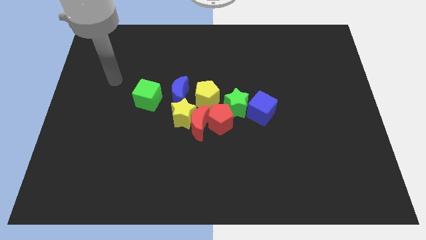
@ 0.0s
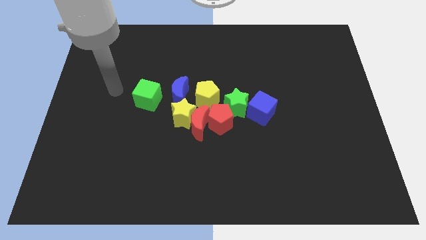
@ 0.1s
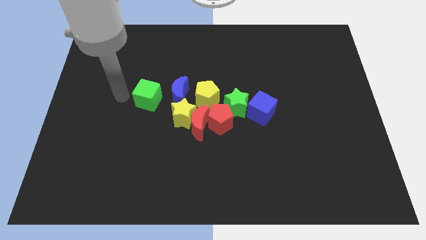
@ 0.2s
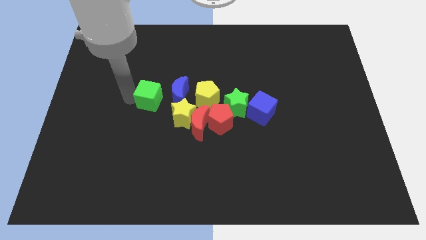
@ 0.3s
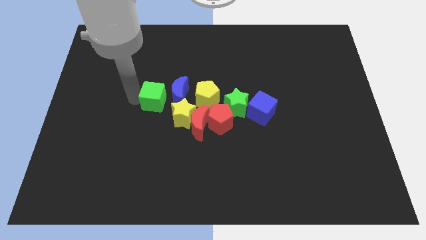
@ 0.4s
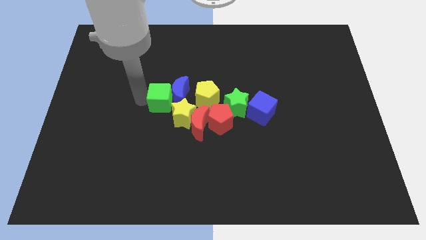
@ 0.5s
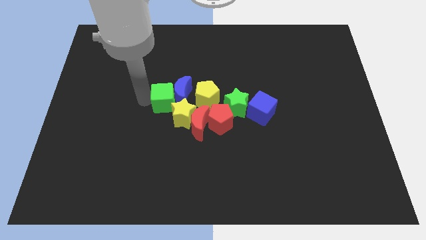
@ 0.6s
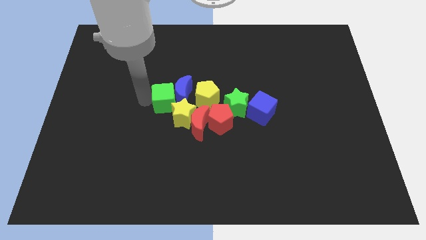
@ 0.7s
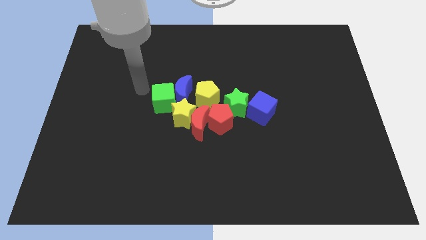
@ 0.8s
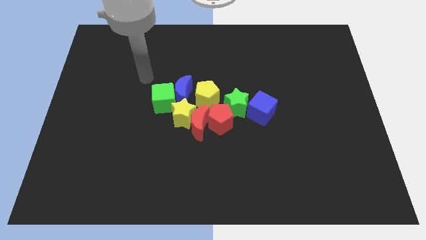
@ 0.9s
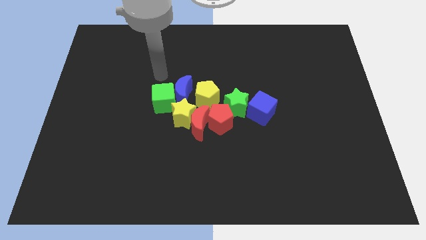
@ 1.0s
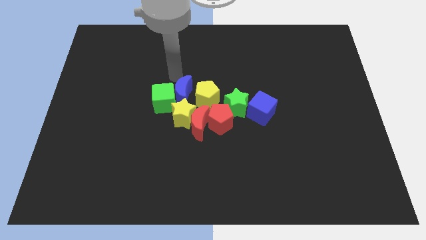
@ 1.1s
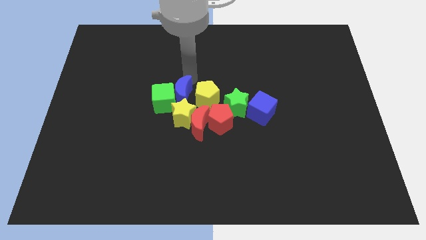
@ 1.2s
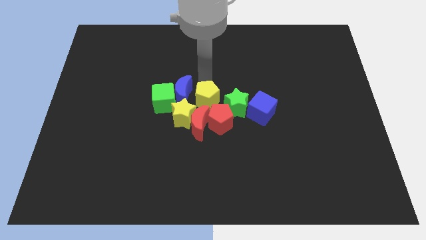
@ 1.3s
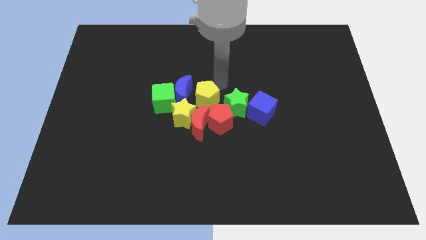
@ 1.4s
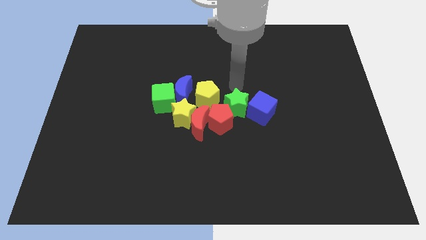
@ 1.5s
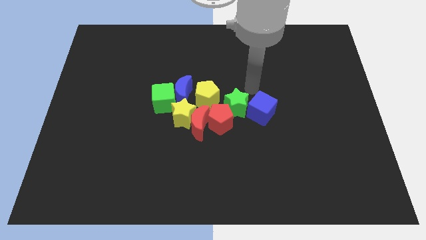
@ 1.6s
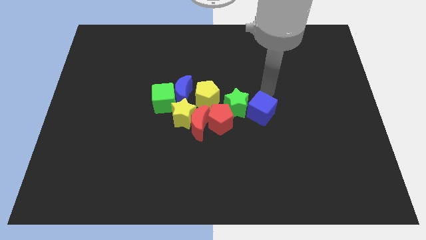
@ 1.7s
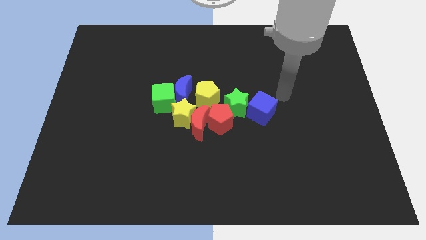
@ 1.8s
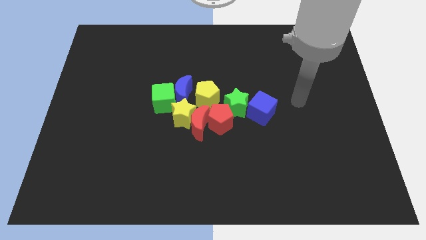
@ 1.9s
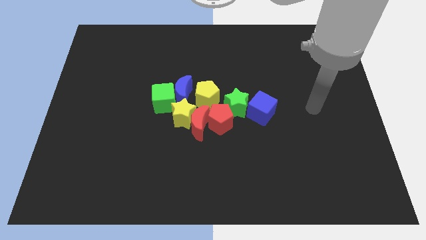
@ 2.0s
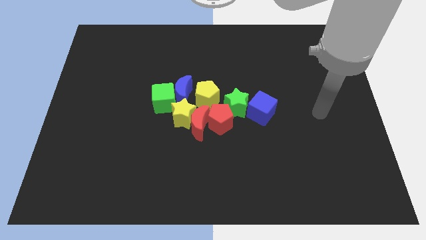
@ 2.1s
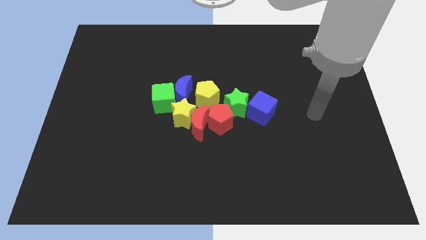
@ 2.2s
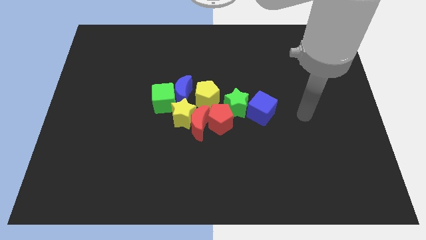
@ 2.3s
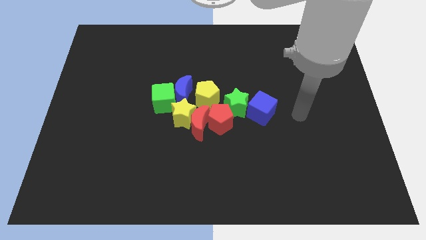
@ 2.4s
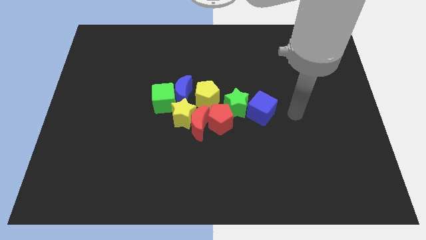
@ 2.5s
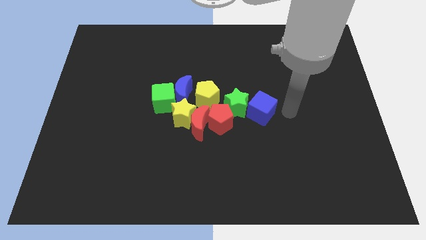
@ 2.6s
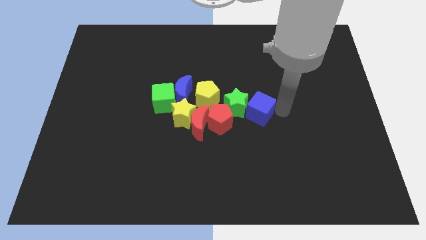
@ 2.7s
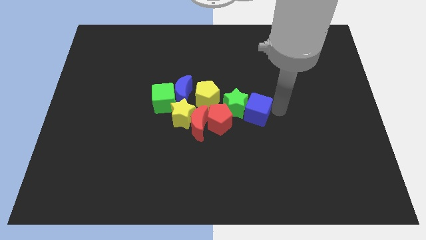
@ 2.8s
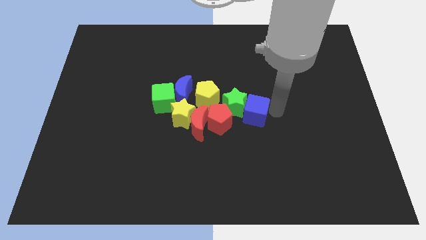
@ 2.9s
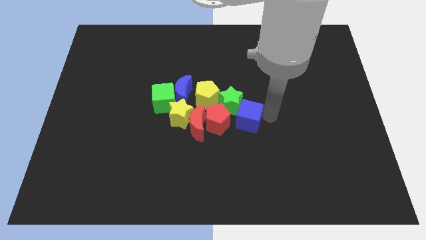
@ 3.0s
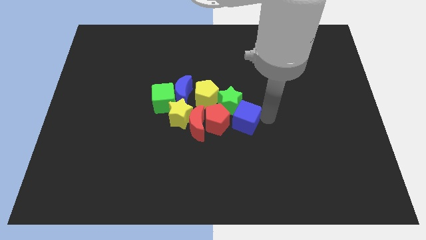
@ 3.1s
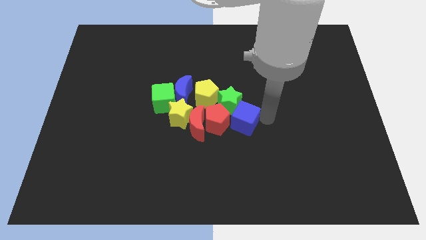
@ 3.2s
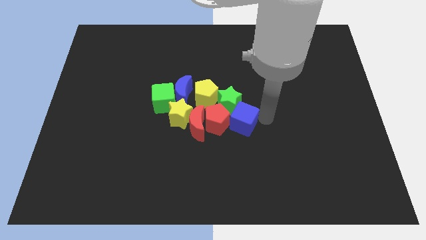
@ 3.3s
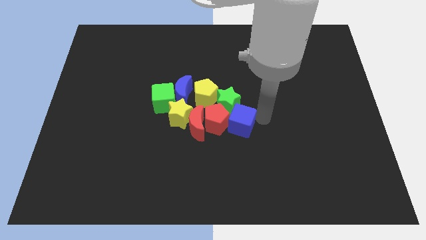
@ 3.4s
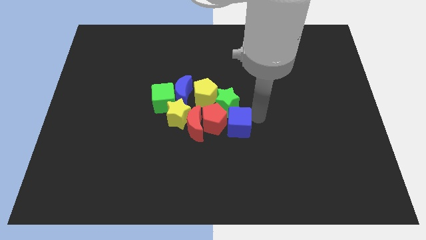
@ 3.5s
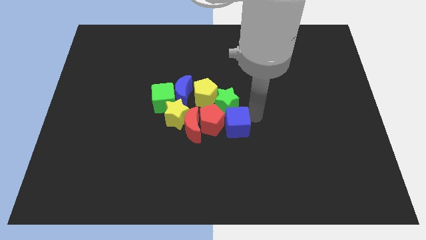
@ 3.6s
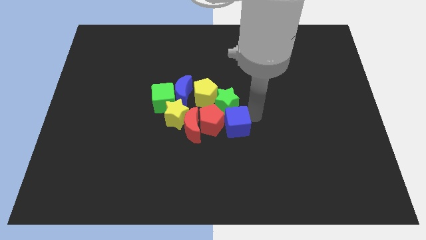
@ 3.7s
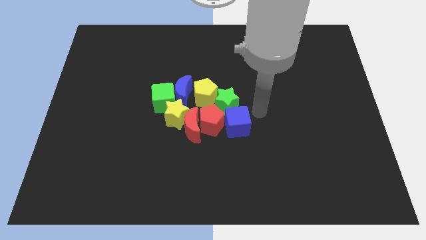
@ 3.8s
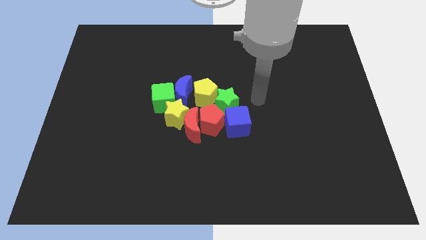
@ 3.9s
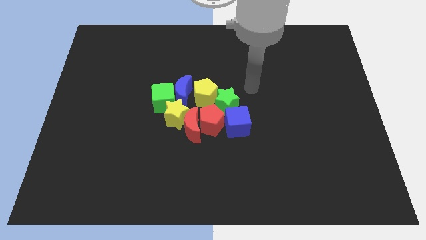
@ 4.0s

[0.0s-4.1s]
push the blue cube into the group of blocks

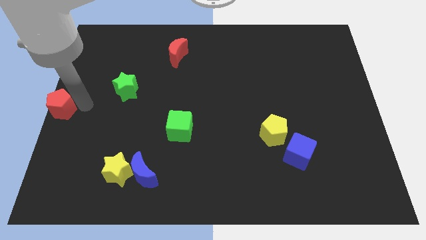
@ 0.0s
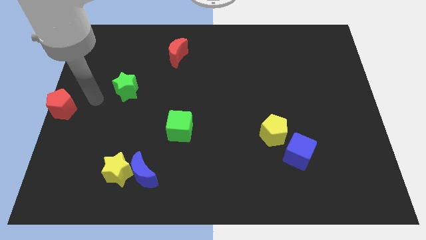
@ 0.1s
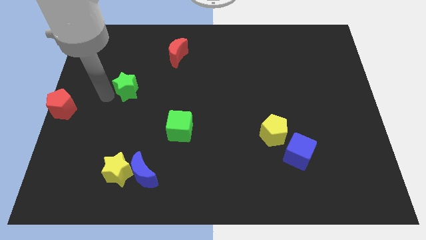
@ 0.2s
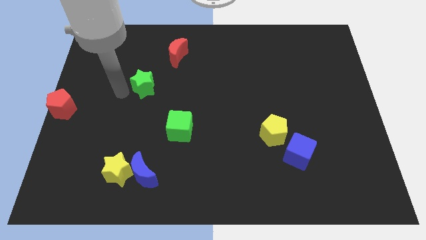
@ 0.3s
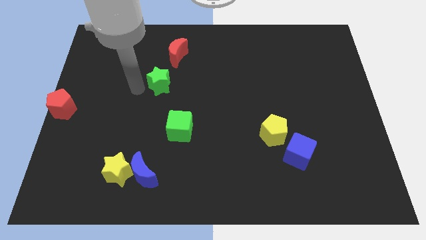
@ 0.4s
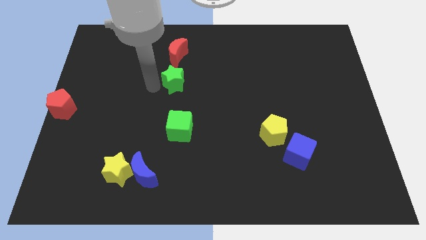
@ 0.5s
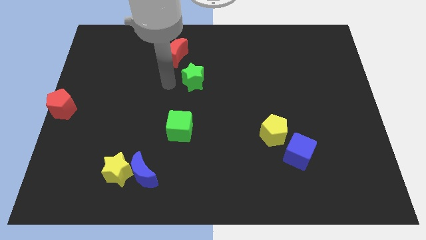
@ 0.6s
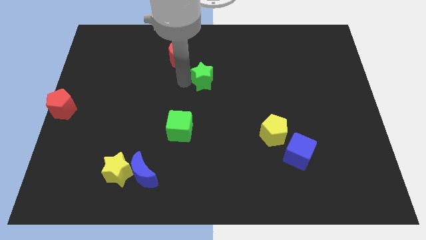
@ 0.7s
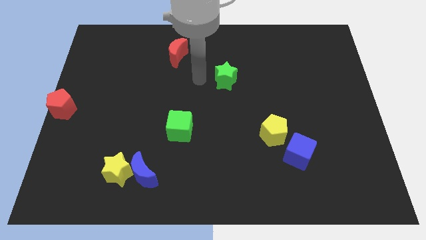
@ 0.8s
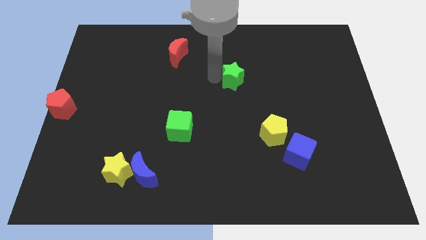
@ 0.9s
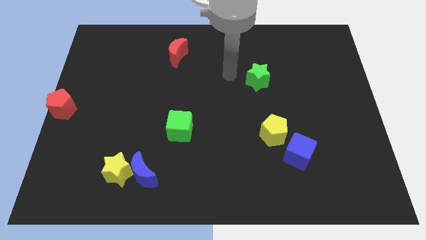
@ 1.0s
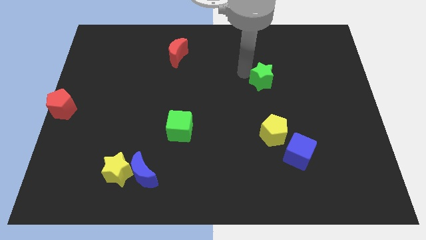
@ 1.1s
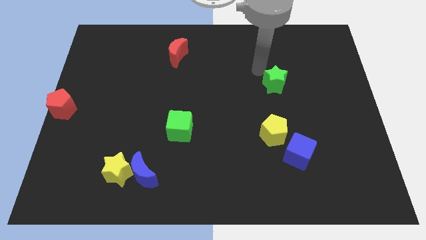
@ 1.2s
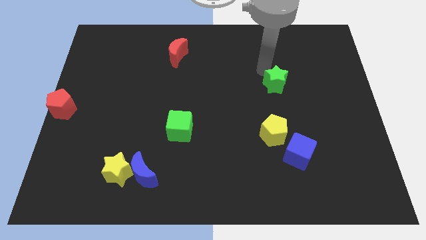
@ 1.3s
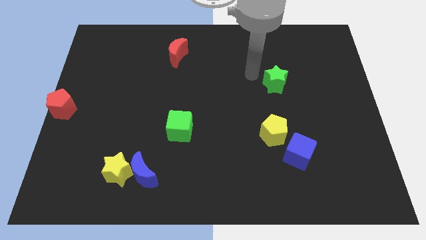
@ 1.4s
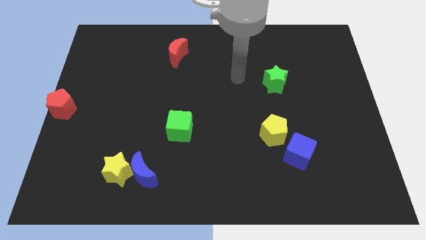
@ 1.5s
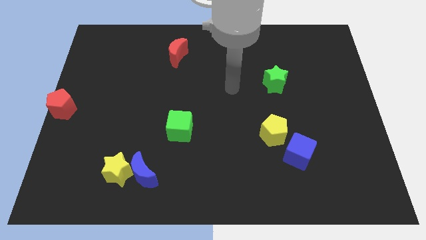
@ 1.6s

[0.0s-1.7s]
move the green star above the yellow pentagon

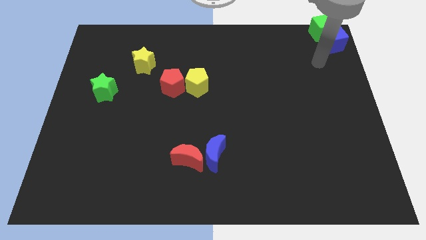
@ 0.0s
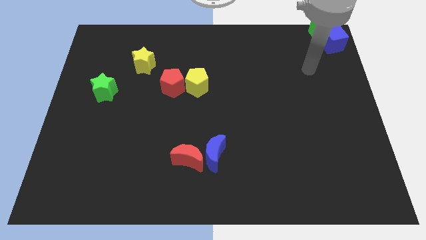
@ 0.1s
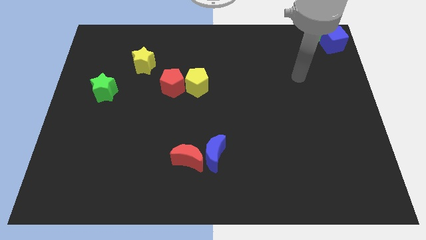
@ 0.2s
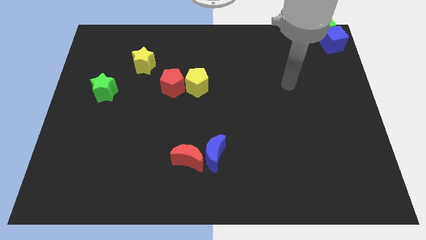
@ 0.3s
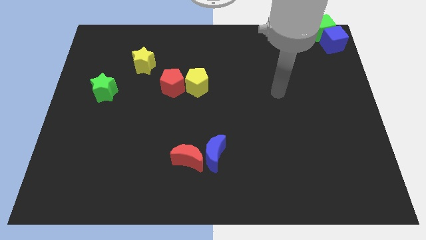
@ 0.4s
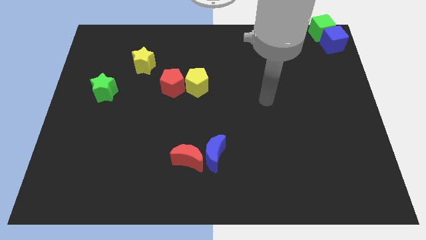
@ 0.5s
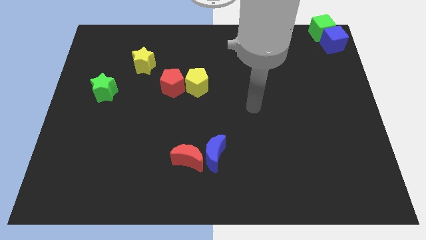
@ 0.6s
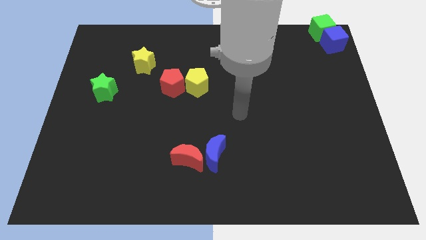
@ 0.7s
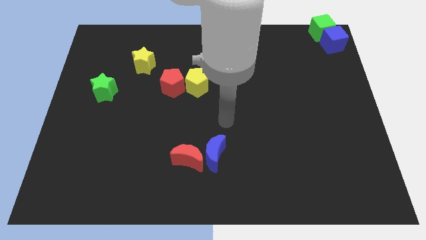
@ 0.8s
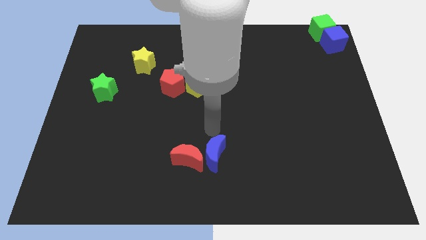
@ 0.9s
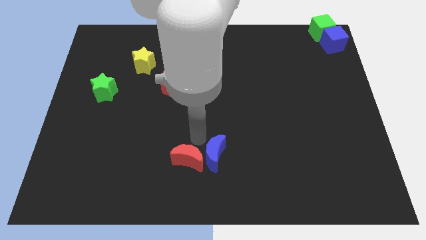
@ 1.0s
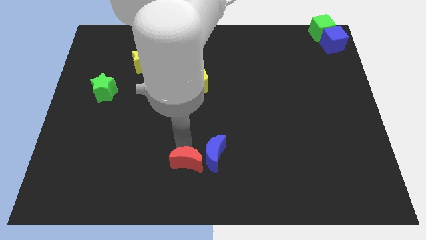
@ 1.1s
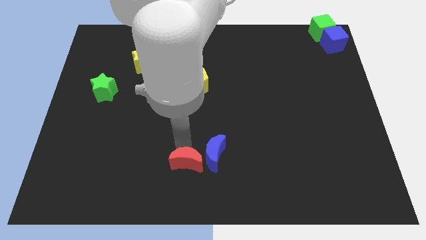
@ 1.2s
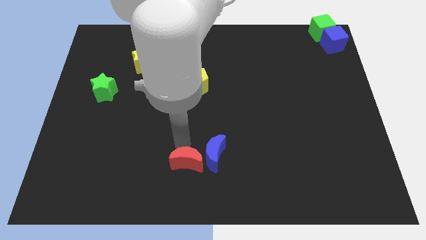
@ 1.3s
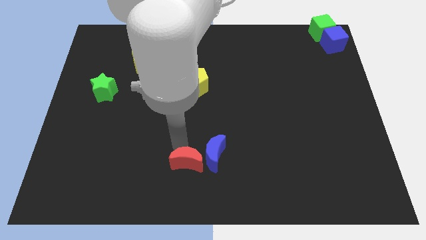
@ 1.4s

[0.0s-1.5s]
touch at the top side of the red crescent

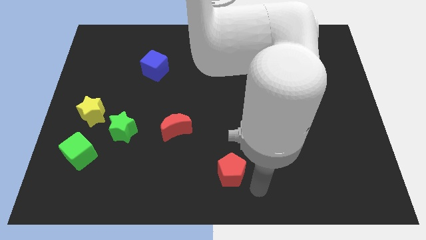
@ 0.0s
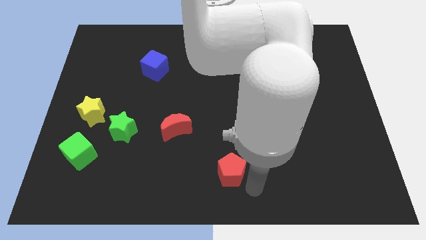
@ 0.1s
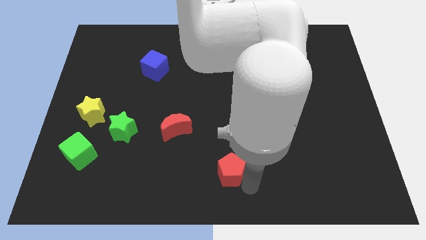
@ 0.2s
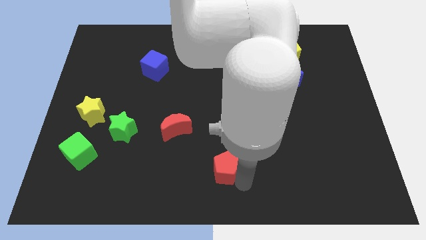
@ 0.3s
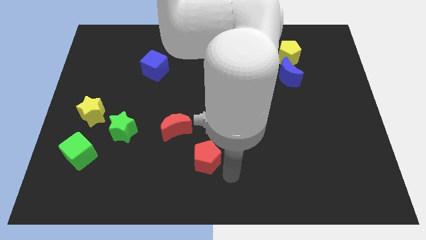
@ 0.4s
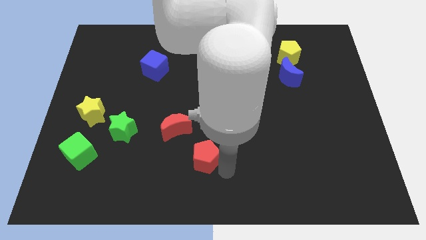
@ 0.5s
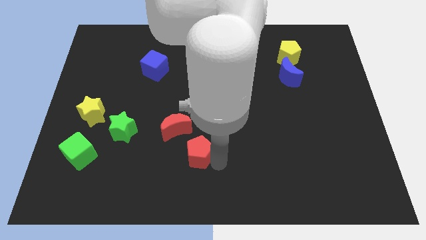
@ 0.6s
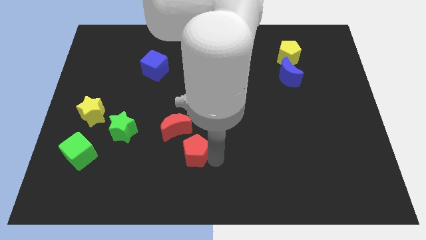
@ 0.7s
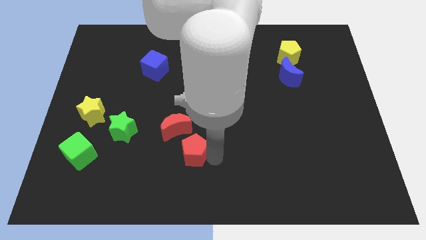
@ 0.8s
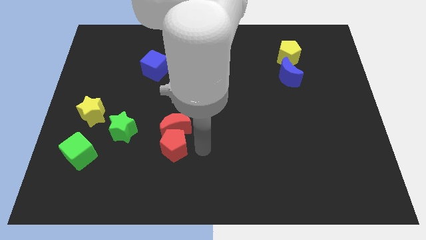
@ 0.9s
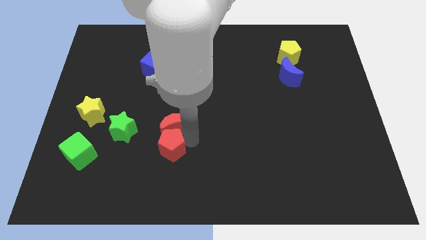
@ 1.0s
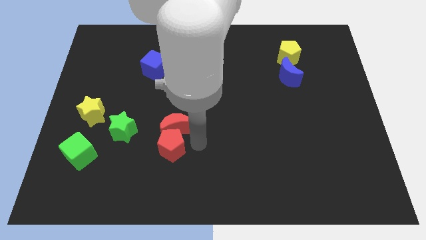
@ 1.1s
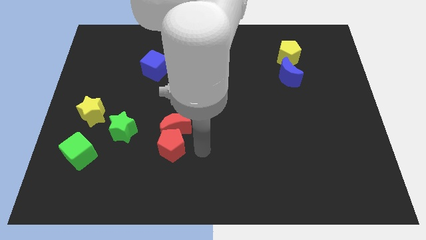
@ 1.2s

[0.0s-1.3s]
push the red pentagon into red moon

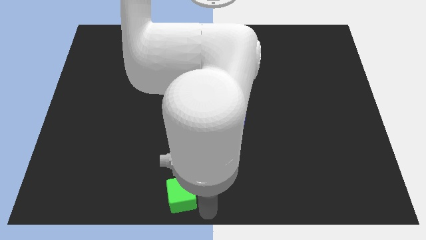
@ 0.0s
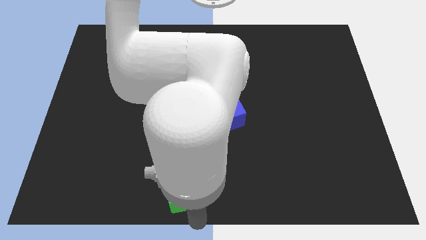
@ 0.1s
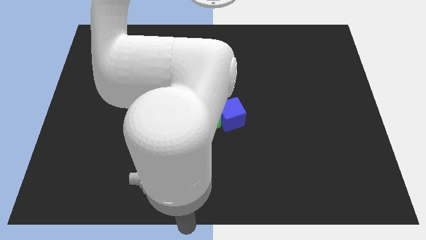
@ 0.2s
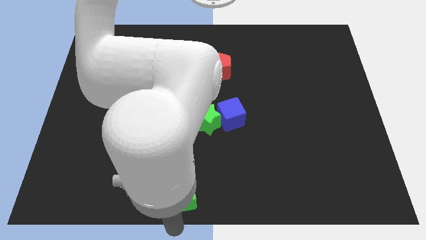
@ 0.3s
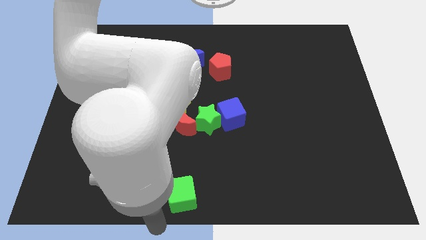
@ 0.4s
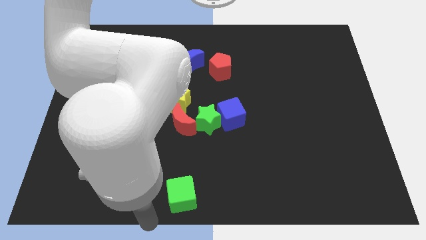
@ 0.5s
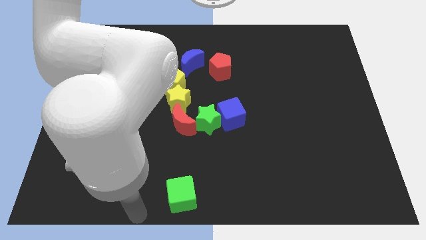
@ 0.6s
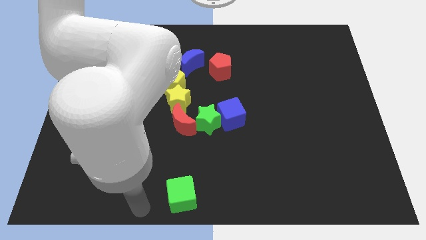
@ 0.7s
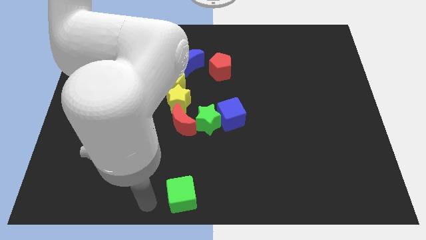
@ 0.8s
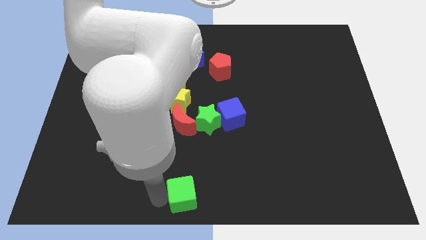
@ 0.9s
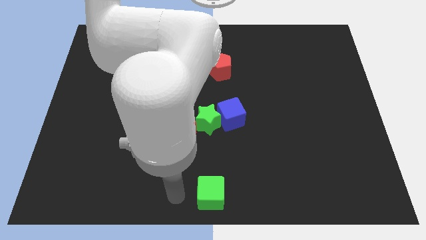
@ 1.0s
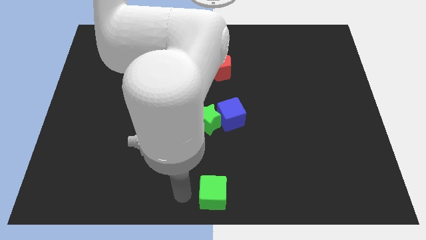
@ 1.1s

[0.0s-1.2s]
put the green cube vertically below the green star
